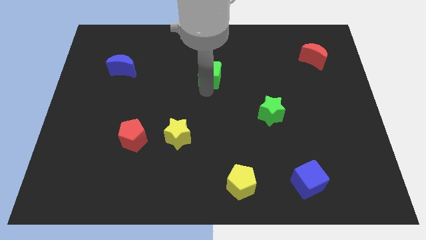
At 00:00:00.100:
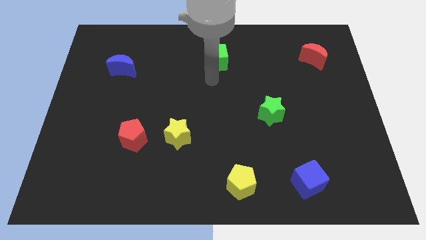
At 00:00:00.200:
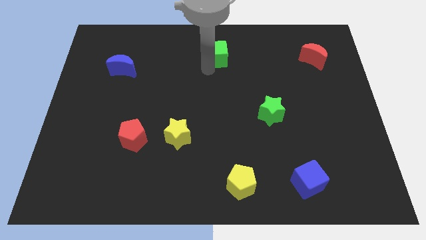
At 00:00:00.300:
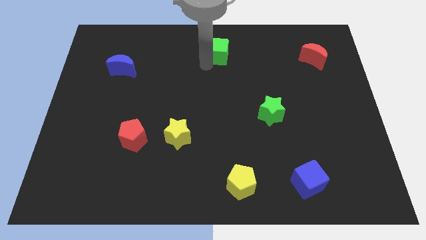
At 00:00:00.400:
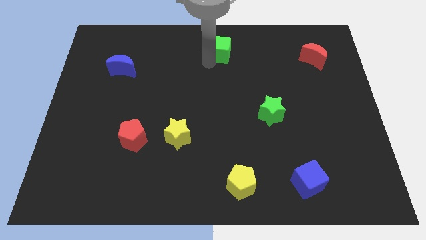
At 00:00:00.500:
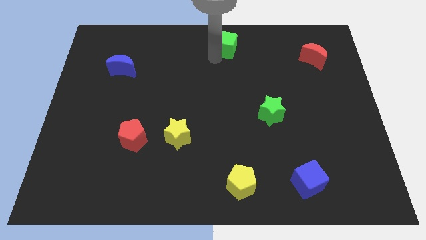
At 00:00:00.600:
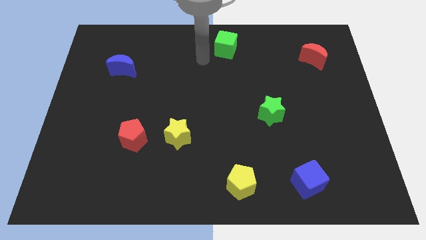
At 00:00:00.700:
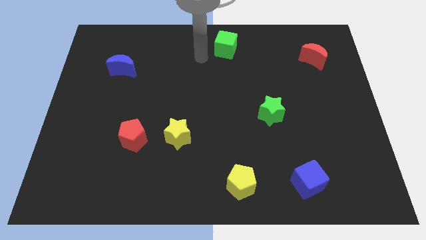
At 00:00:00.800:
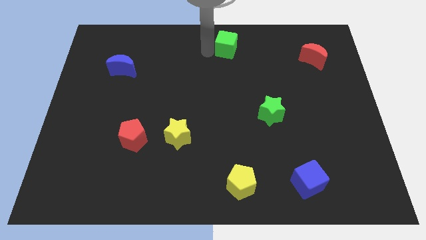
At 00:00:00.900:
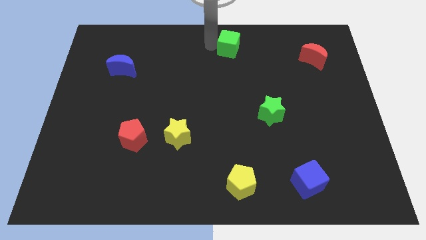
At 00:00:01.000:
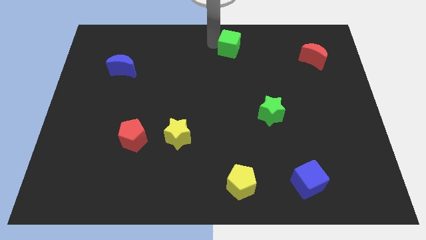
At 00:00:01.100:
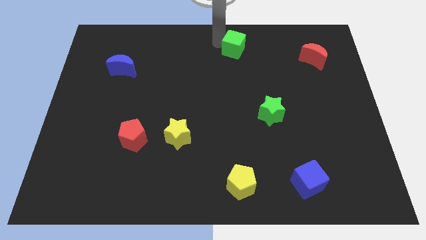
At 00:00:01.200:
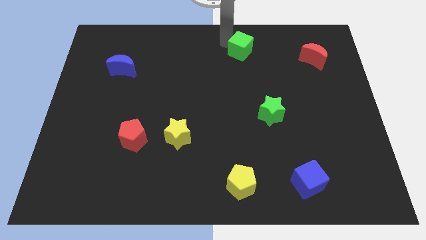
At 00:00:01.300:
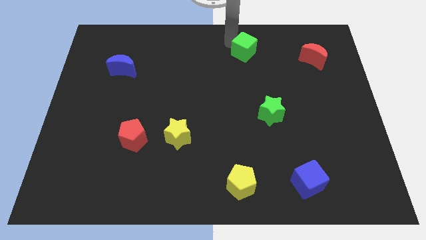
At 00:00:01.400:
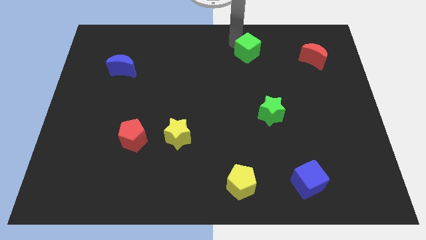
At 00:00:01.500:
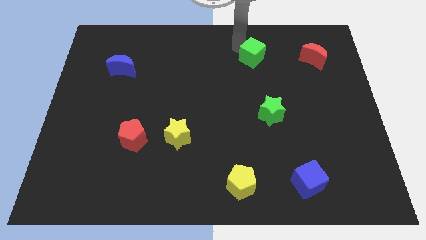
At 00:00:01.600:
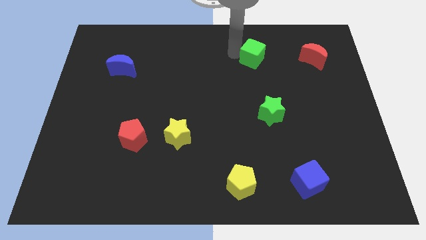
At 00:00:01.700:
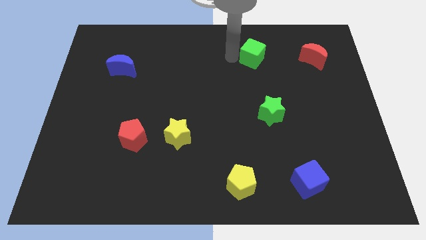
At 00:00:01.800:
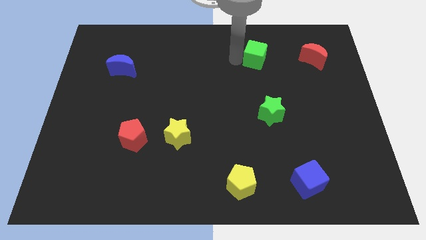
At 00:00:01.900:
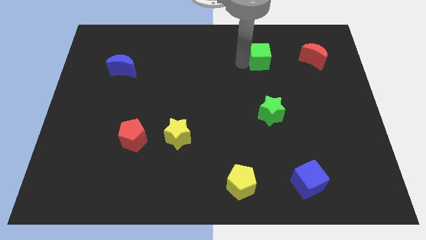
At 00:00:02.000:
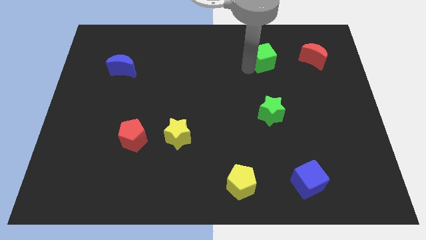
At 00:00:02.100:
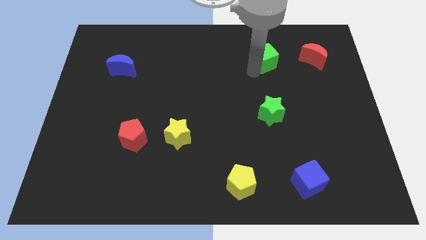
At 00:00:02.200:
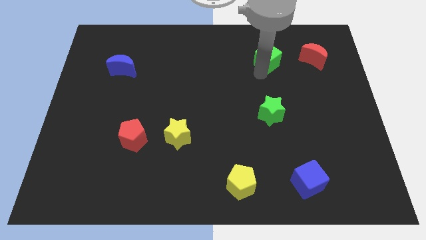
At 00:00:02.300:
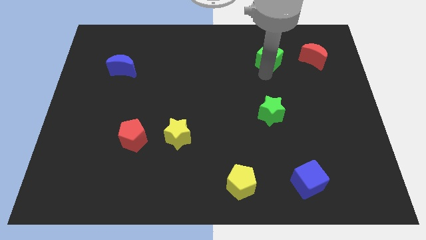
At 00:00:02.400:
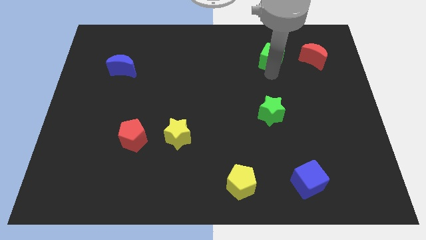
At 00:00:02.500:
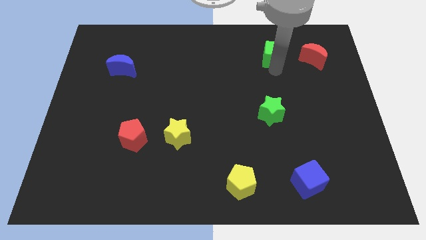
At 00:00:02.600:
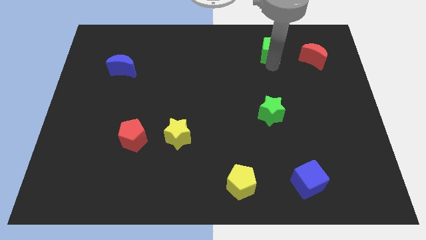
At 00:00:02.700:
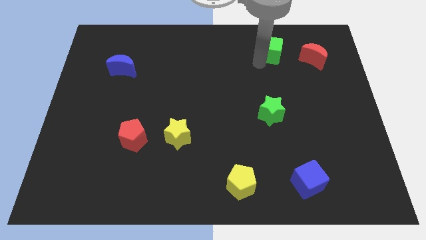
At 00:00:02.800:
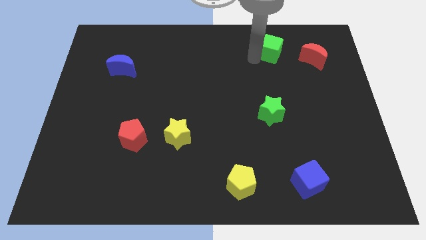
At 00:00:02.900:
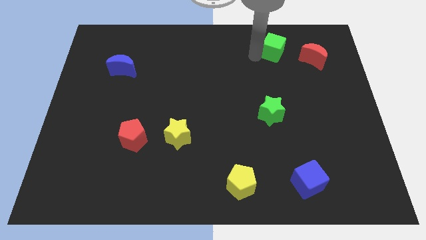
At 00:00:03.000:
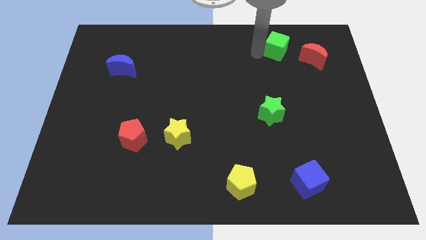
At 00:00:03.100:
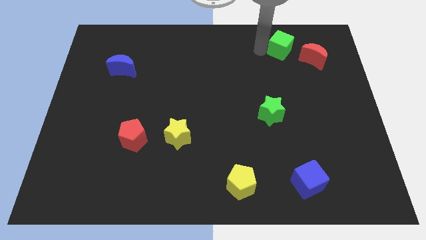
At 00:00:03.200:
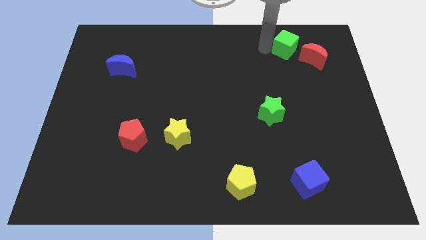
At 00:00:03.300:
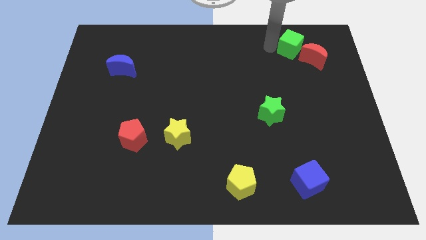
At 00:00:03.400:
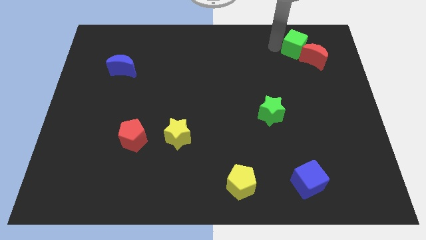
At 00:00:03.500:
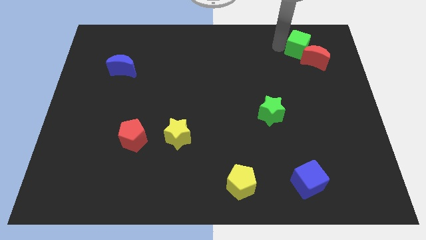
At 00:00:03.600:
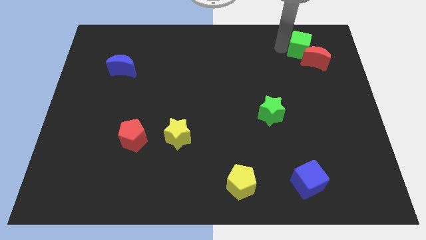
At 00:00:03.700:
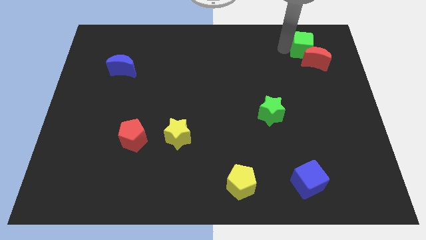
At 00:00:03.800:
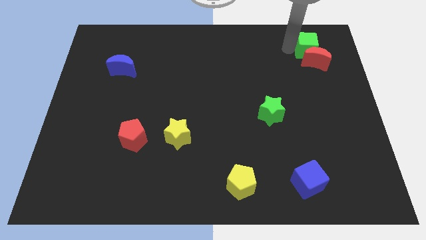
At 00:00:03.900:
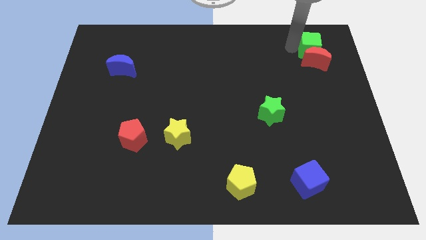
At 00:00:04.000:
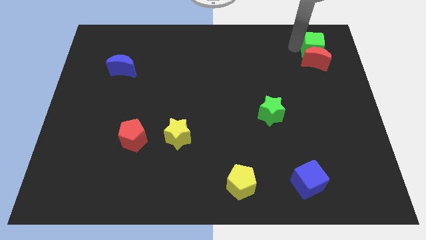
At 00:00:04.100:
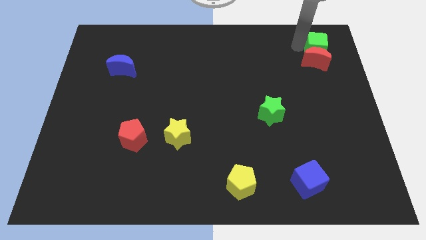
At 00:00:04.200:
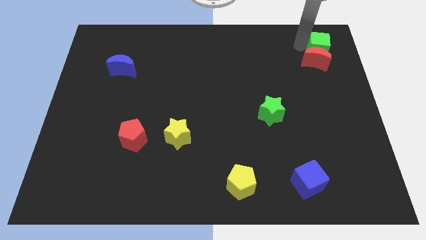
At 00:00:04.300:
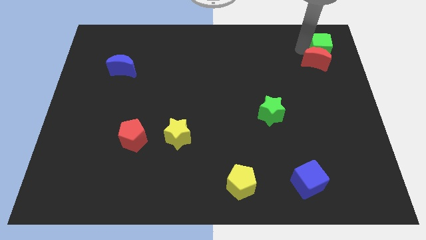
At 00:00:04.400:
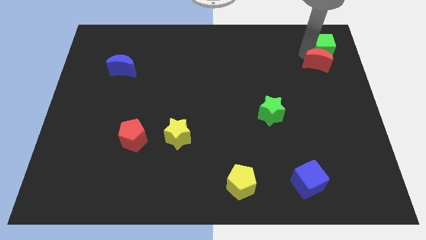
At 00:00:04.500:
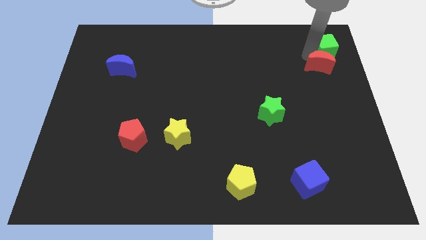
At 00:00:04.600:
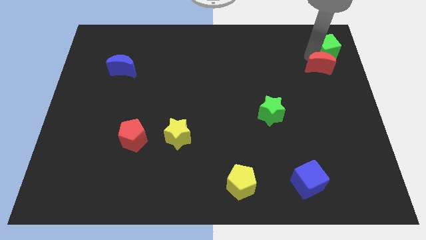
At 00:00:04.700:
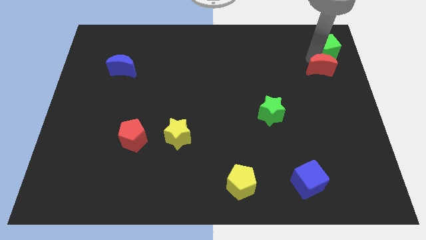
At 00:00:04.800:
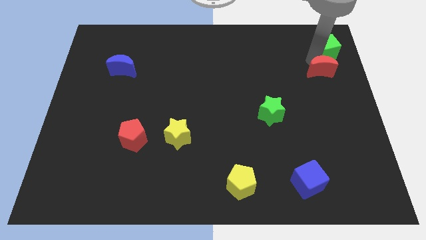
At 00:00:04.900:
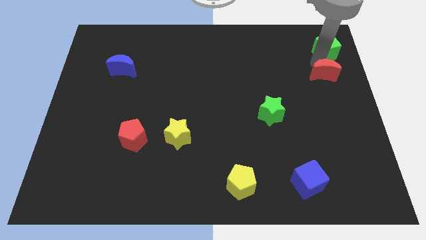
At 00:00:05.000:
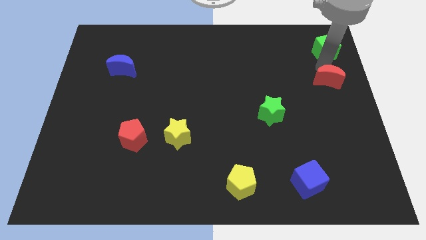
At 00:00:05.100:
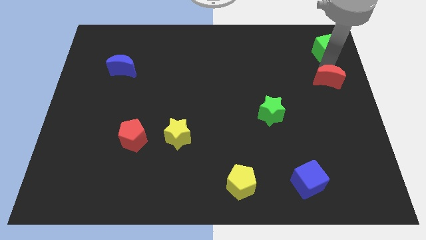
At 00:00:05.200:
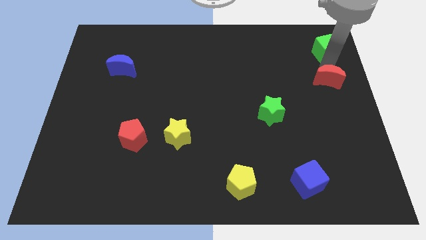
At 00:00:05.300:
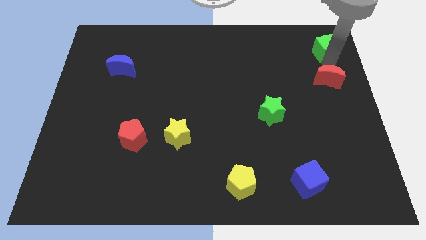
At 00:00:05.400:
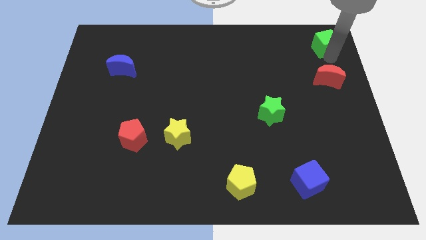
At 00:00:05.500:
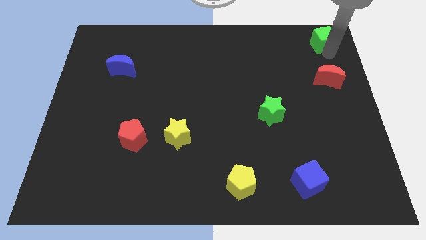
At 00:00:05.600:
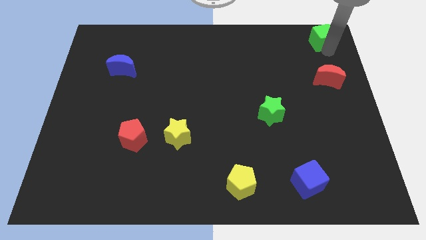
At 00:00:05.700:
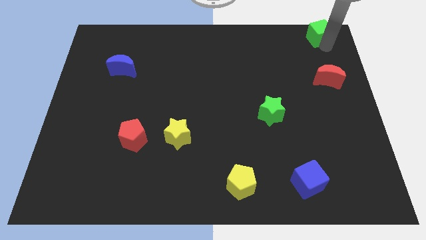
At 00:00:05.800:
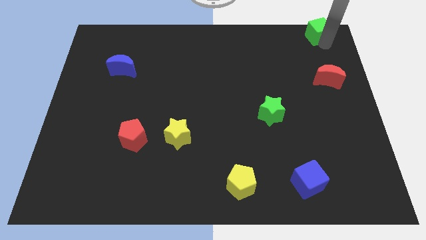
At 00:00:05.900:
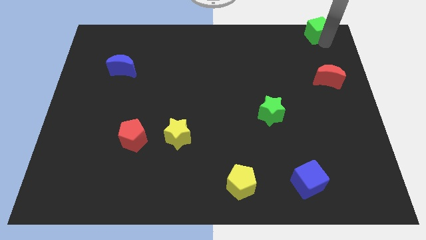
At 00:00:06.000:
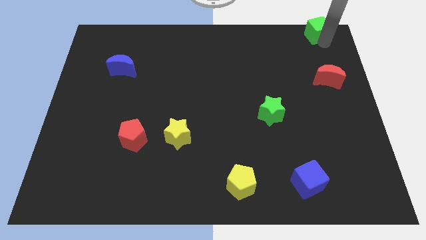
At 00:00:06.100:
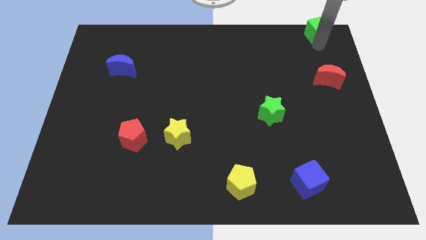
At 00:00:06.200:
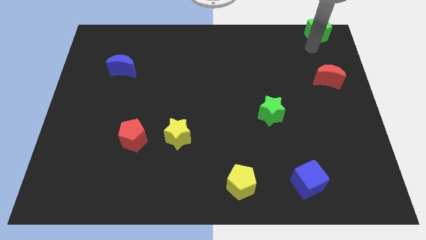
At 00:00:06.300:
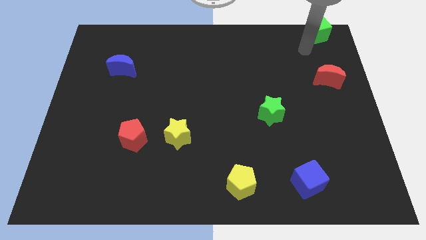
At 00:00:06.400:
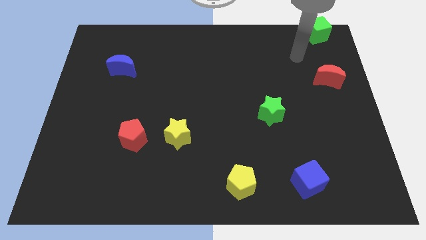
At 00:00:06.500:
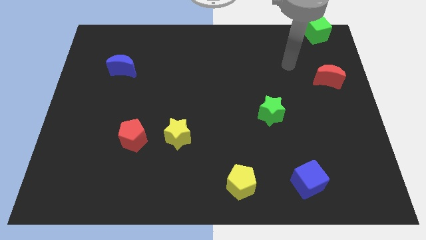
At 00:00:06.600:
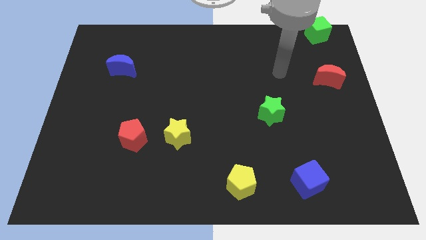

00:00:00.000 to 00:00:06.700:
place the green cube to the top right side of board

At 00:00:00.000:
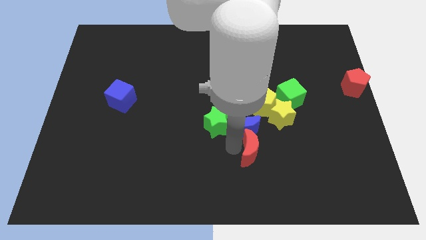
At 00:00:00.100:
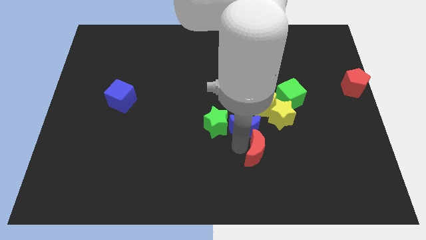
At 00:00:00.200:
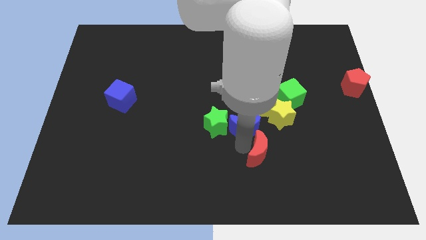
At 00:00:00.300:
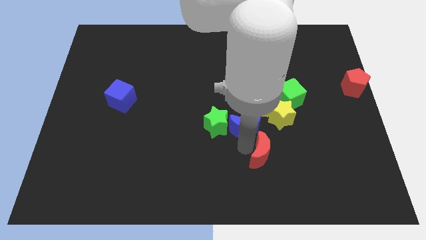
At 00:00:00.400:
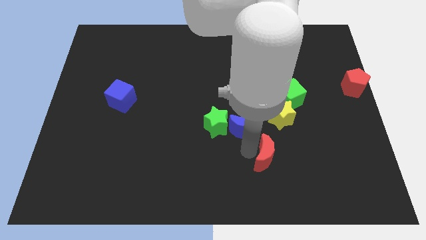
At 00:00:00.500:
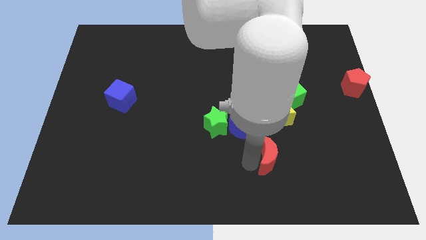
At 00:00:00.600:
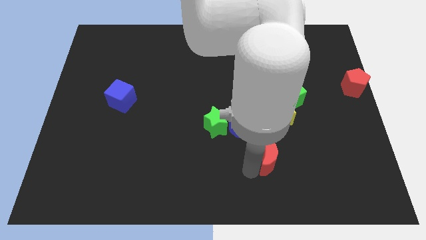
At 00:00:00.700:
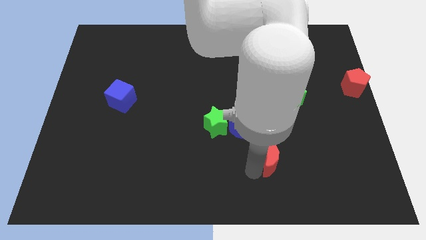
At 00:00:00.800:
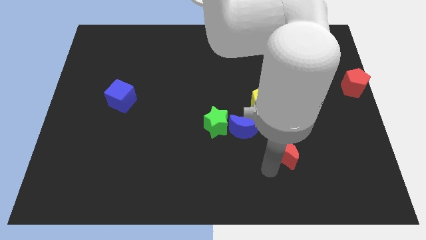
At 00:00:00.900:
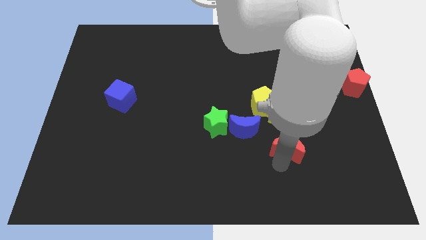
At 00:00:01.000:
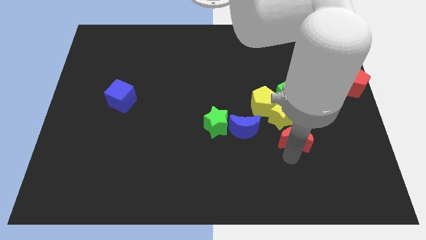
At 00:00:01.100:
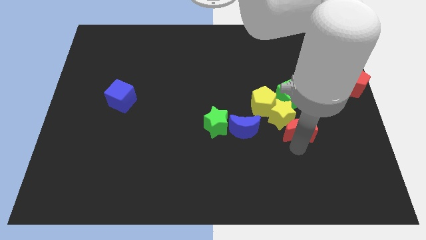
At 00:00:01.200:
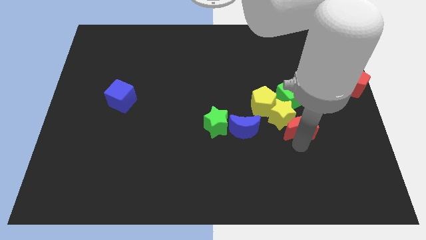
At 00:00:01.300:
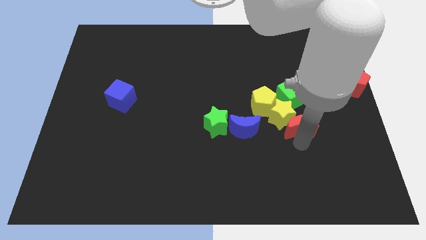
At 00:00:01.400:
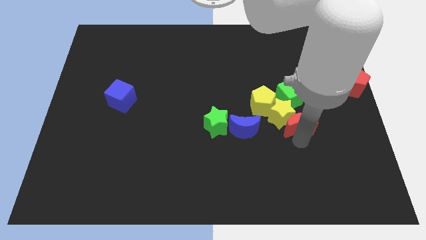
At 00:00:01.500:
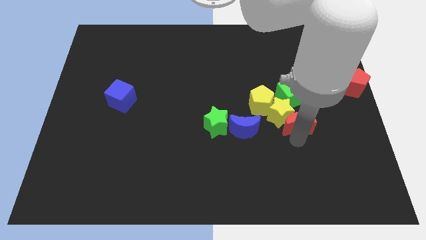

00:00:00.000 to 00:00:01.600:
push the red crescent below the yellow star

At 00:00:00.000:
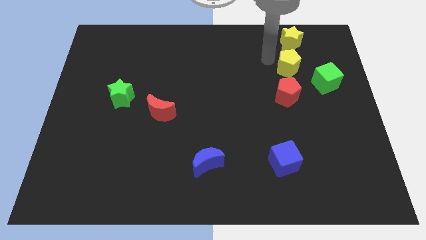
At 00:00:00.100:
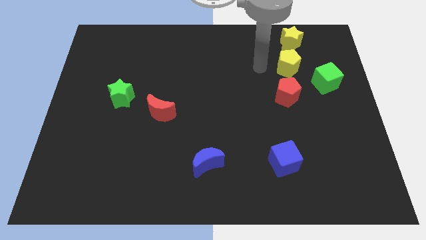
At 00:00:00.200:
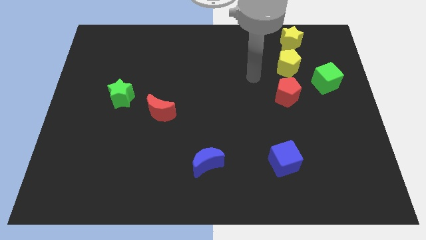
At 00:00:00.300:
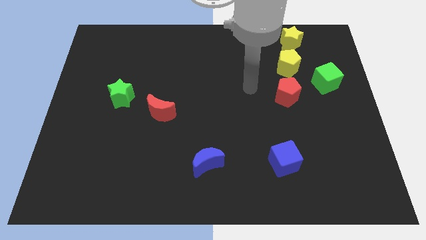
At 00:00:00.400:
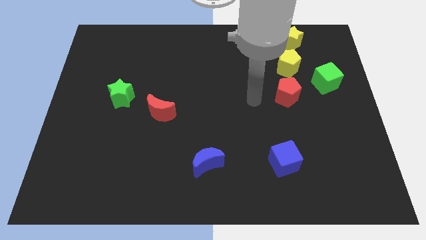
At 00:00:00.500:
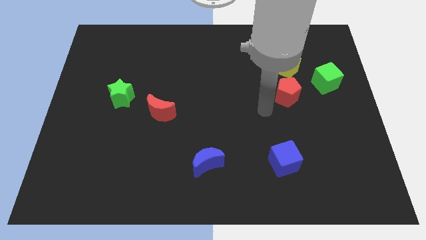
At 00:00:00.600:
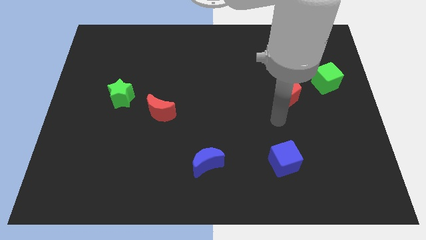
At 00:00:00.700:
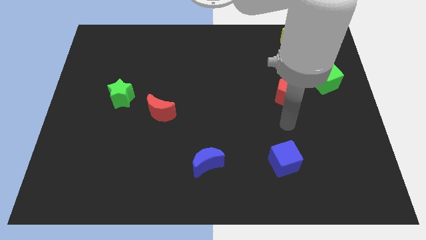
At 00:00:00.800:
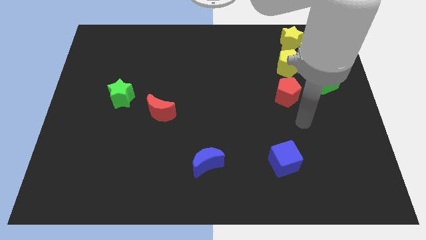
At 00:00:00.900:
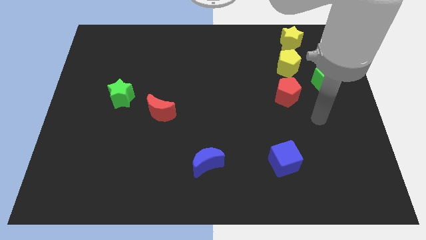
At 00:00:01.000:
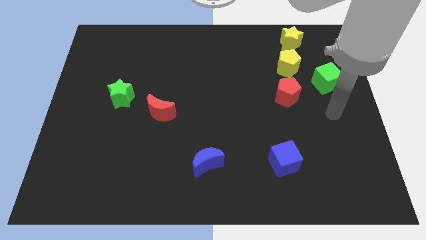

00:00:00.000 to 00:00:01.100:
move your arm away from yellow star
